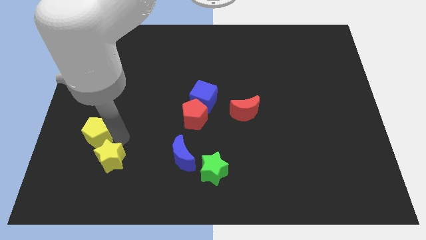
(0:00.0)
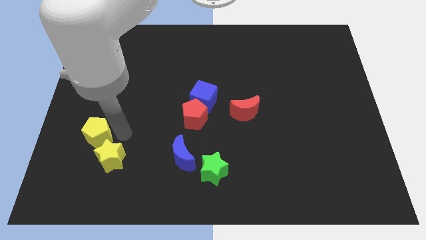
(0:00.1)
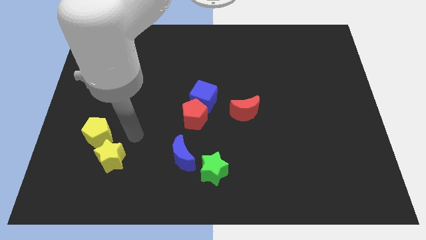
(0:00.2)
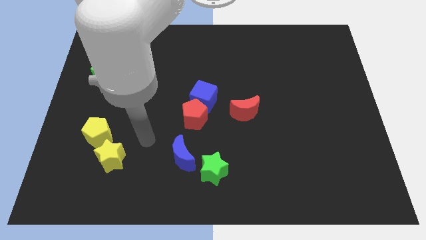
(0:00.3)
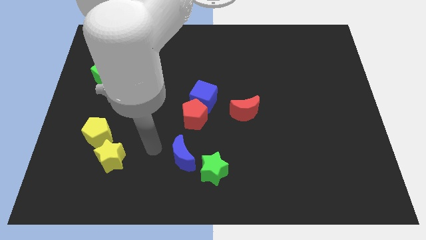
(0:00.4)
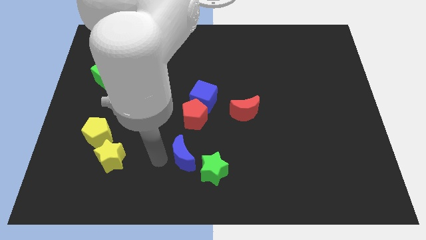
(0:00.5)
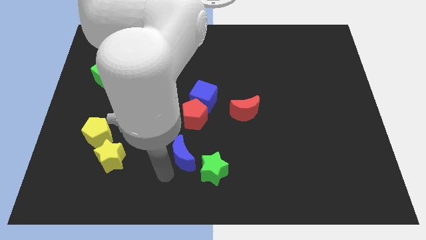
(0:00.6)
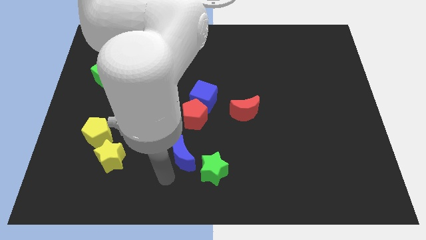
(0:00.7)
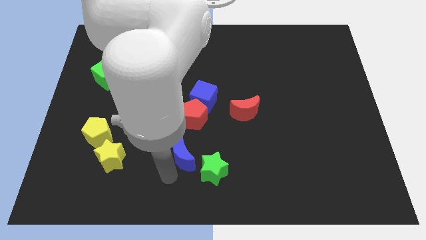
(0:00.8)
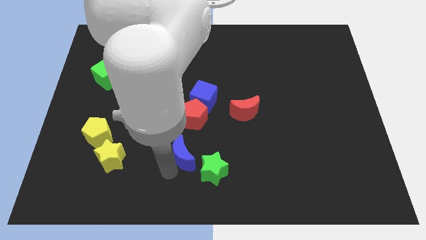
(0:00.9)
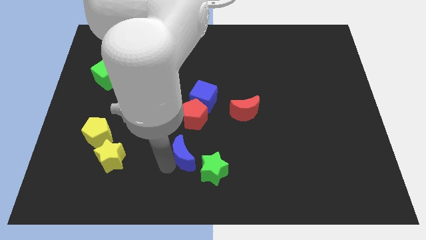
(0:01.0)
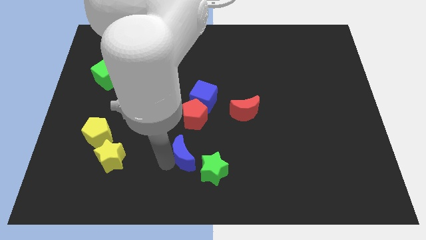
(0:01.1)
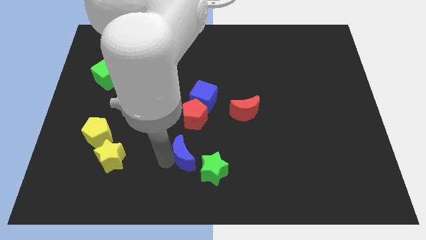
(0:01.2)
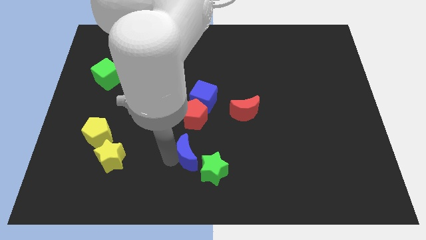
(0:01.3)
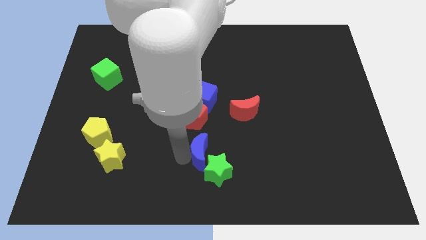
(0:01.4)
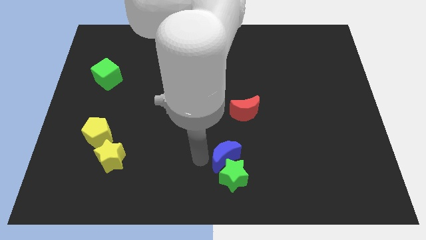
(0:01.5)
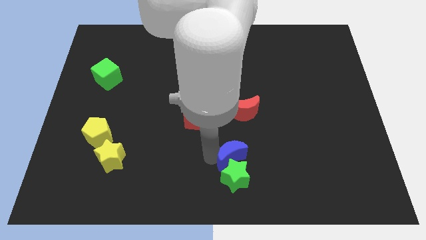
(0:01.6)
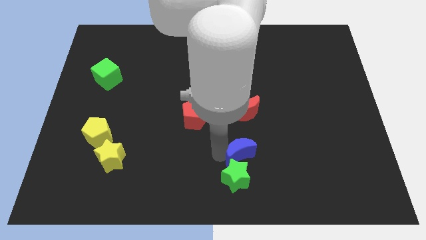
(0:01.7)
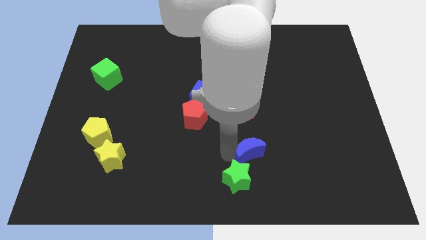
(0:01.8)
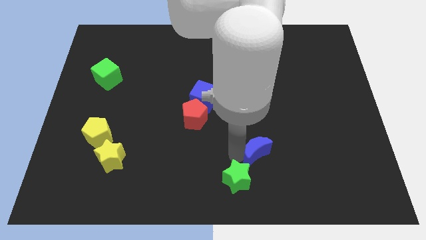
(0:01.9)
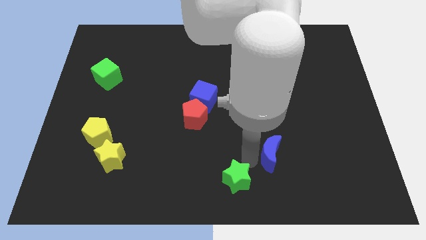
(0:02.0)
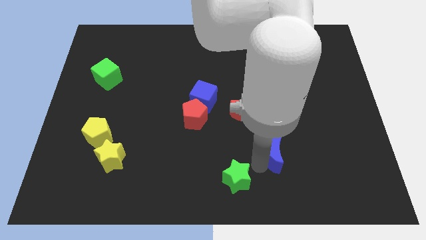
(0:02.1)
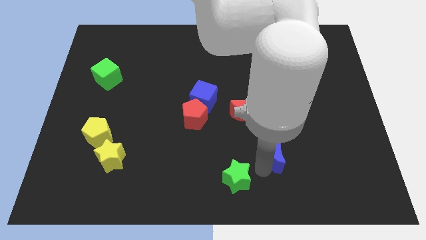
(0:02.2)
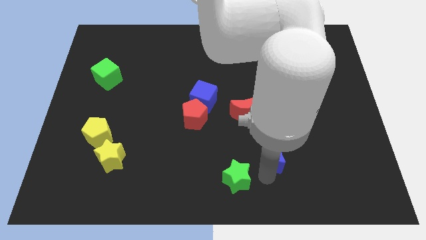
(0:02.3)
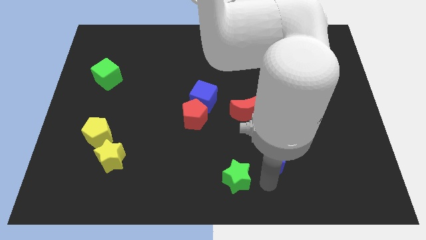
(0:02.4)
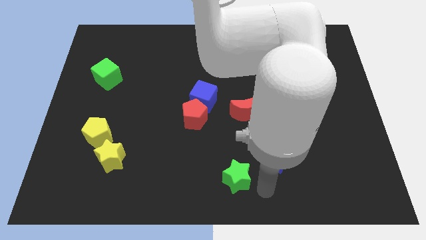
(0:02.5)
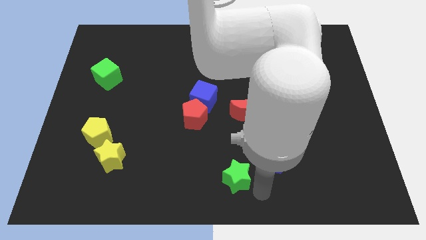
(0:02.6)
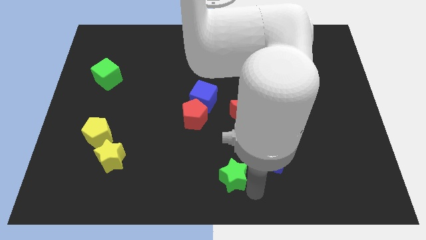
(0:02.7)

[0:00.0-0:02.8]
move the blue moon slightly to the right

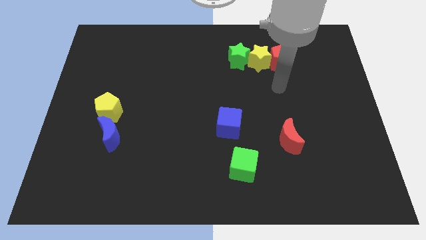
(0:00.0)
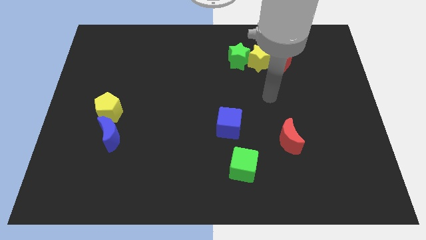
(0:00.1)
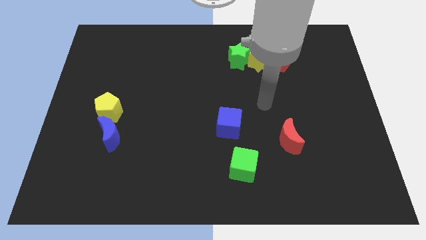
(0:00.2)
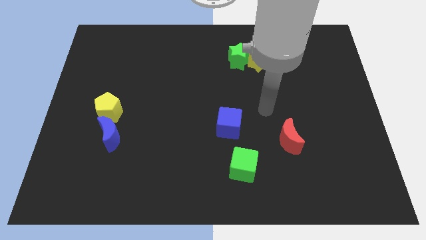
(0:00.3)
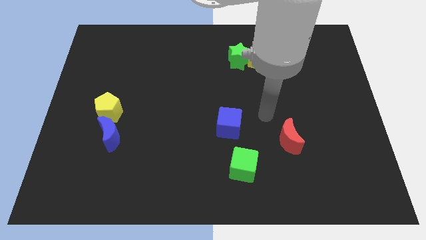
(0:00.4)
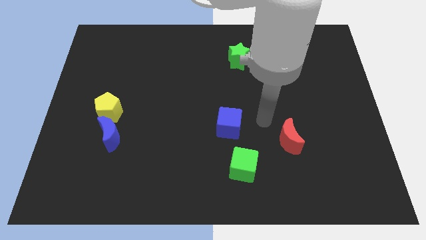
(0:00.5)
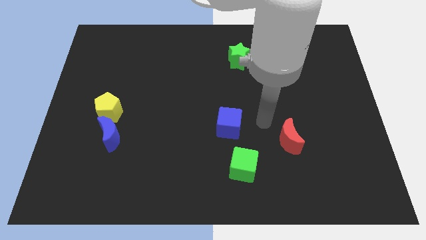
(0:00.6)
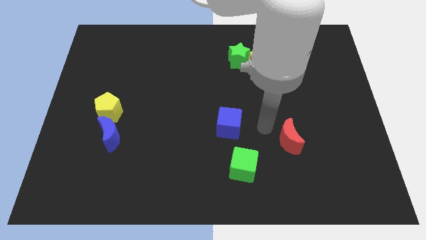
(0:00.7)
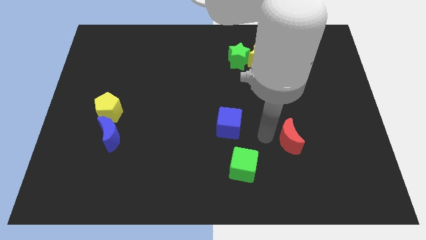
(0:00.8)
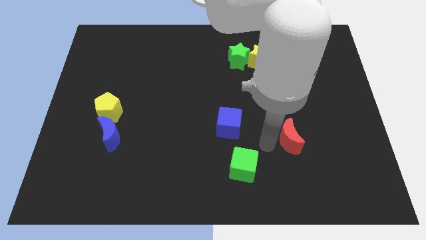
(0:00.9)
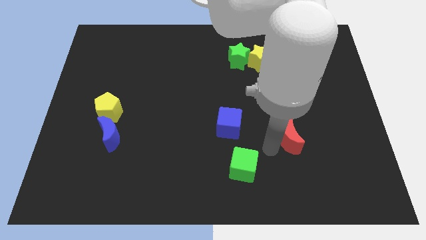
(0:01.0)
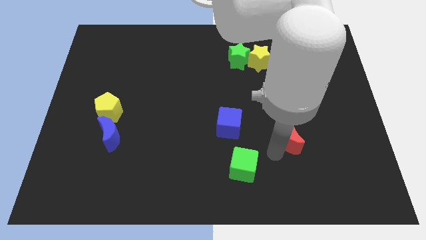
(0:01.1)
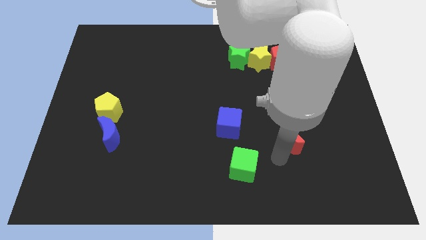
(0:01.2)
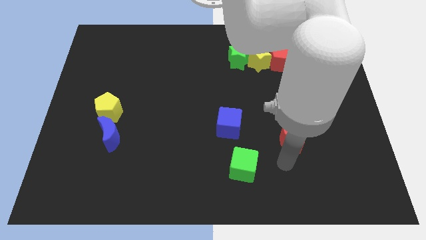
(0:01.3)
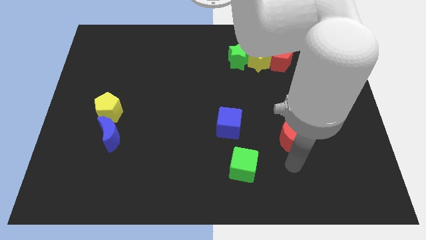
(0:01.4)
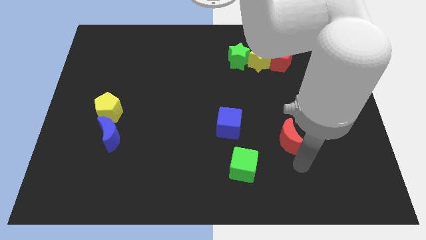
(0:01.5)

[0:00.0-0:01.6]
move arm to the bottom of red crescent

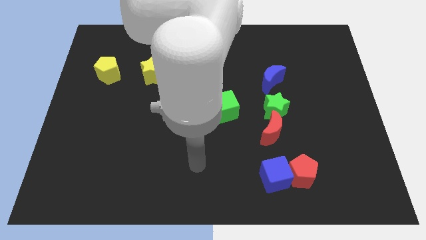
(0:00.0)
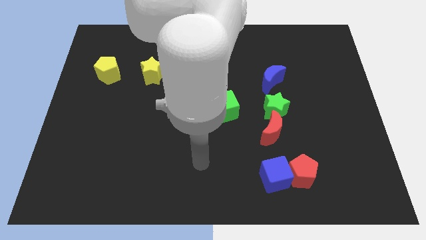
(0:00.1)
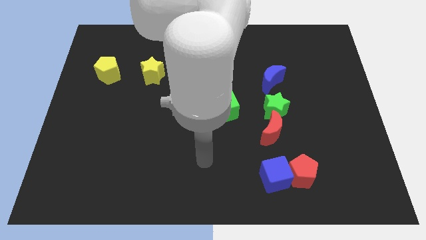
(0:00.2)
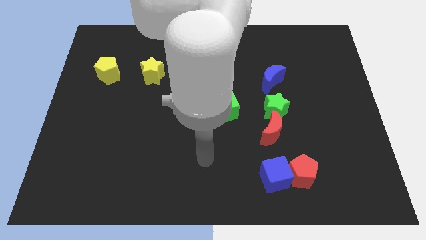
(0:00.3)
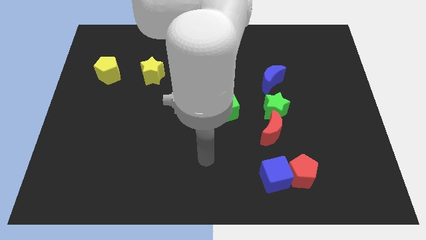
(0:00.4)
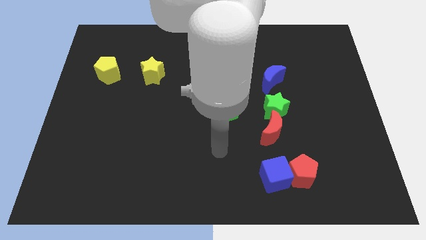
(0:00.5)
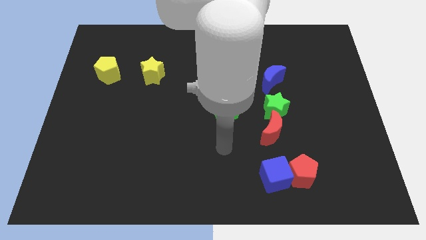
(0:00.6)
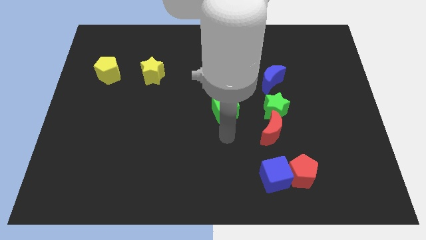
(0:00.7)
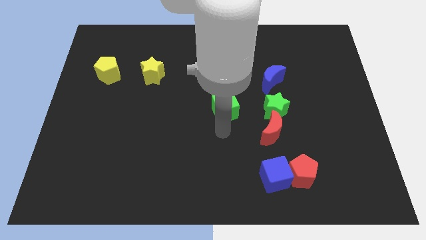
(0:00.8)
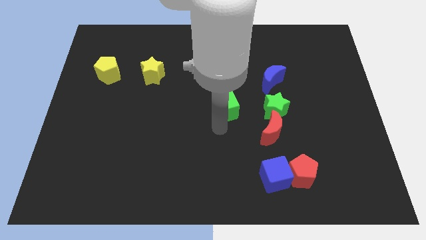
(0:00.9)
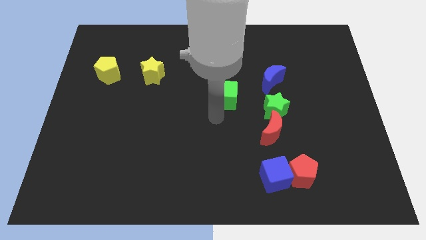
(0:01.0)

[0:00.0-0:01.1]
touch the green cube

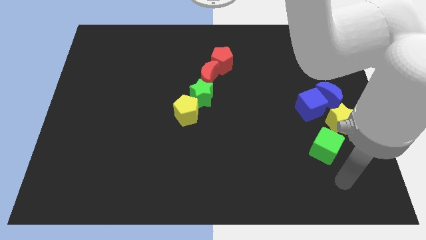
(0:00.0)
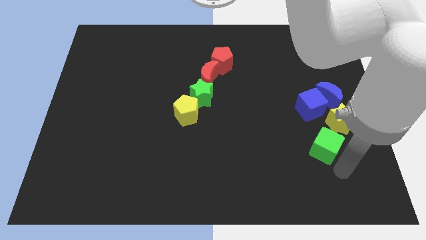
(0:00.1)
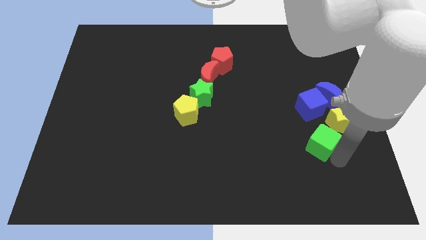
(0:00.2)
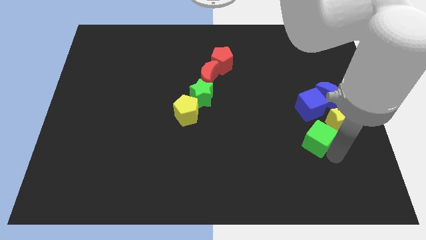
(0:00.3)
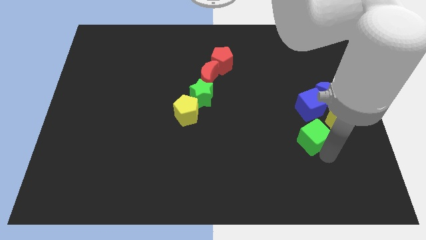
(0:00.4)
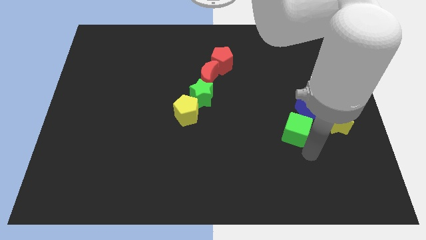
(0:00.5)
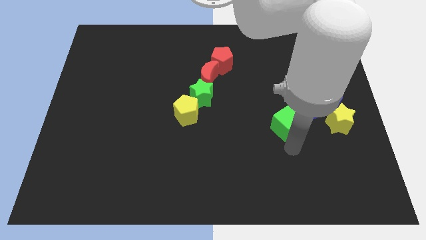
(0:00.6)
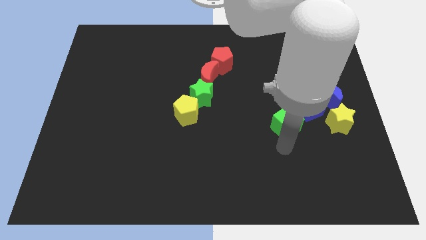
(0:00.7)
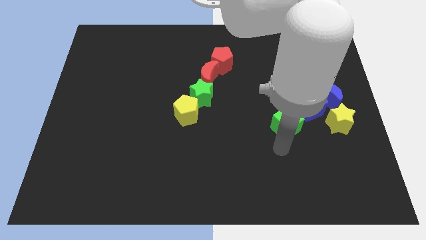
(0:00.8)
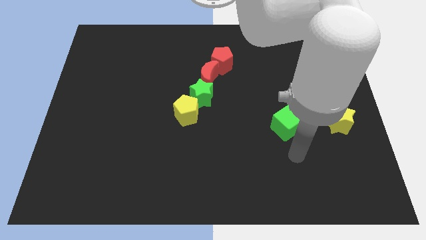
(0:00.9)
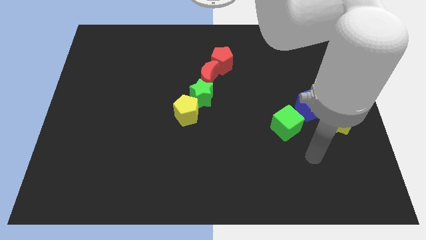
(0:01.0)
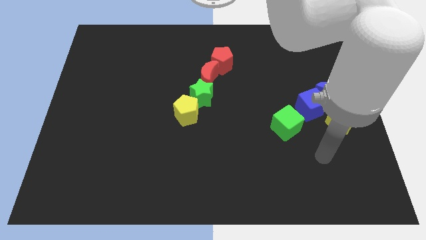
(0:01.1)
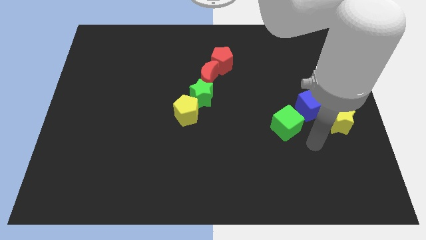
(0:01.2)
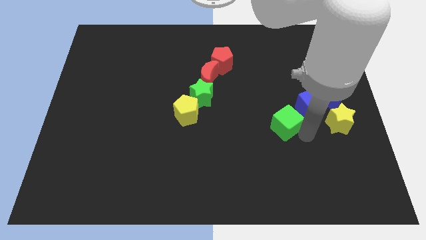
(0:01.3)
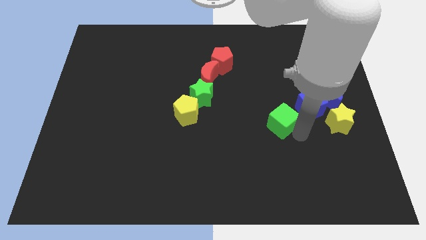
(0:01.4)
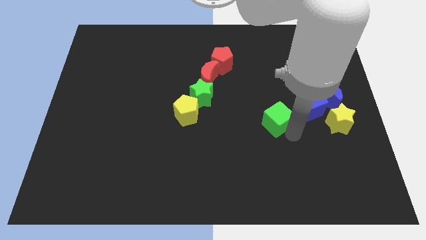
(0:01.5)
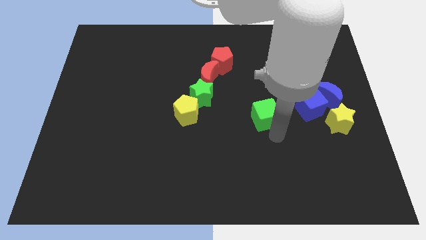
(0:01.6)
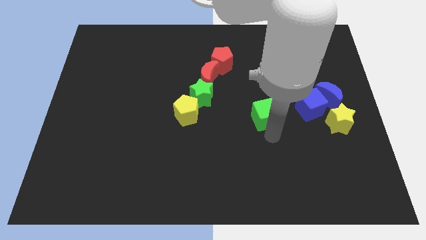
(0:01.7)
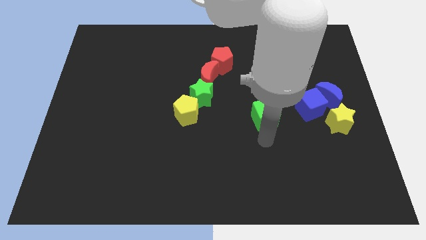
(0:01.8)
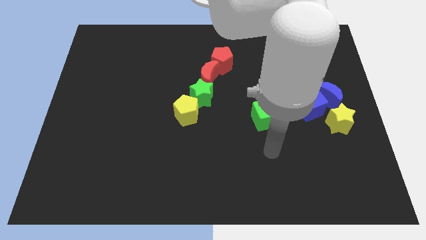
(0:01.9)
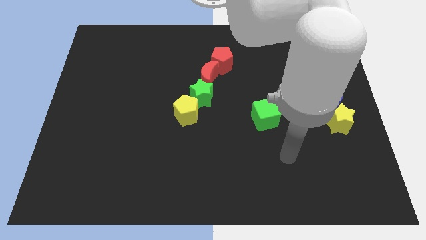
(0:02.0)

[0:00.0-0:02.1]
push the green cube to the left side of the blue cube

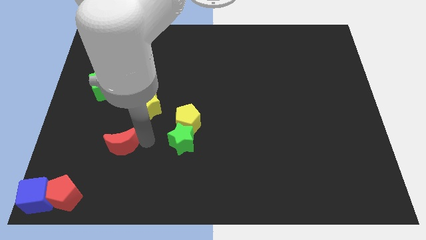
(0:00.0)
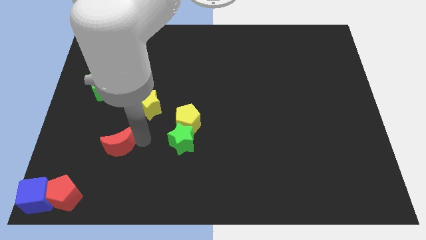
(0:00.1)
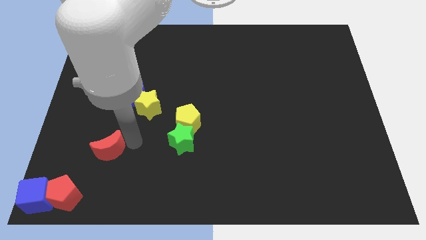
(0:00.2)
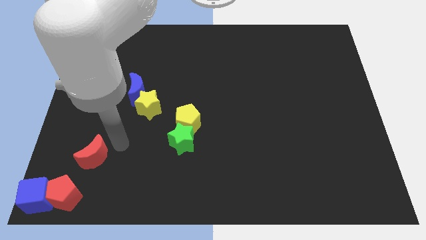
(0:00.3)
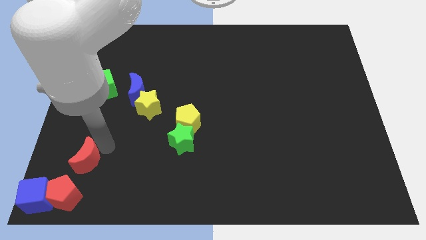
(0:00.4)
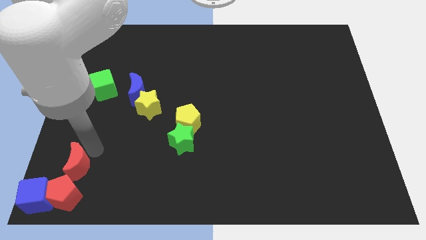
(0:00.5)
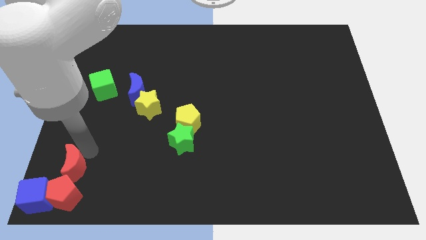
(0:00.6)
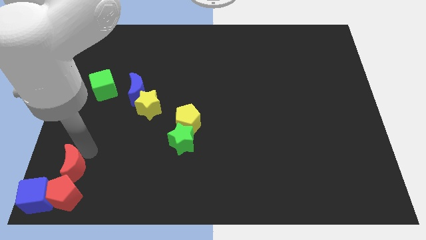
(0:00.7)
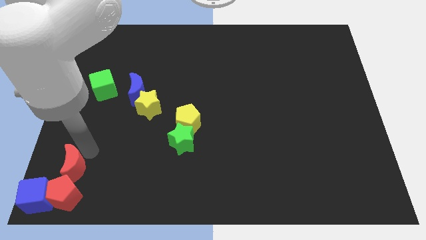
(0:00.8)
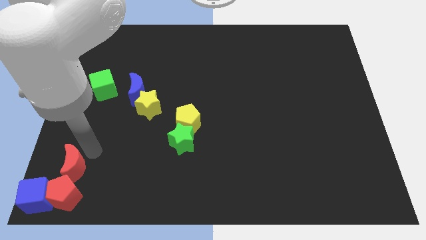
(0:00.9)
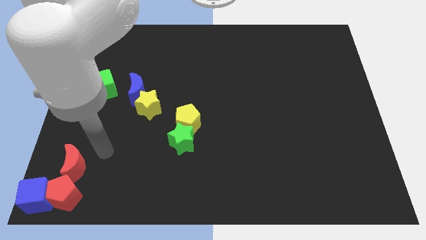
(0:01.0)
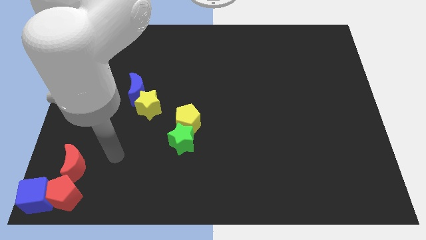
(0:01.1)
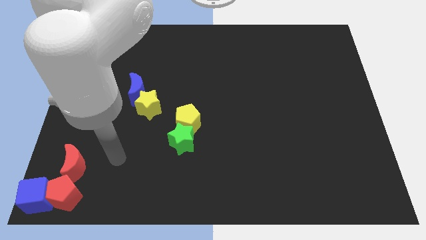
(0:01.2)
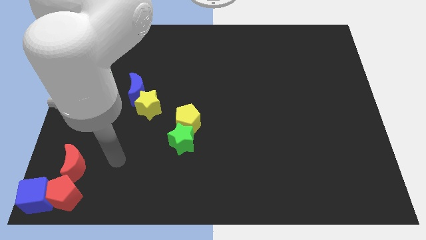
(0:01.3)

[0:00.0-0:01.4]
move the red crescent above the red pentagon
